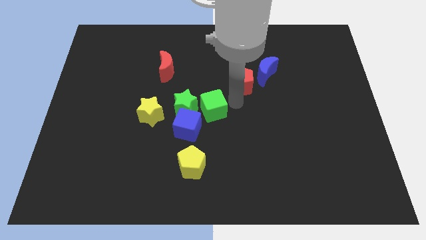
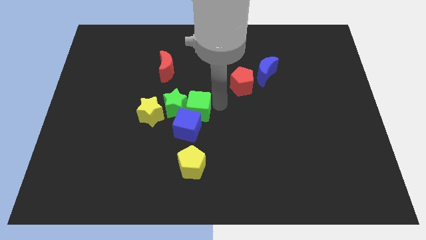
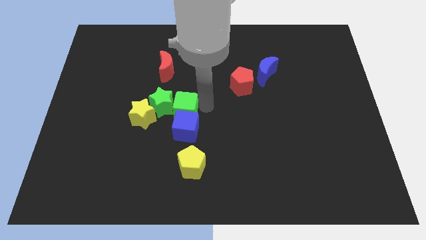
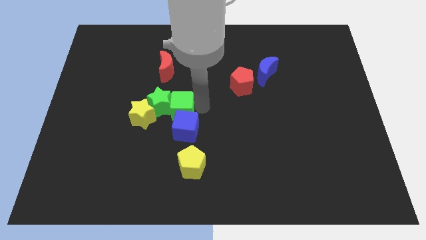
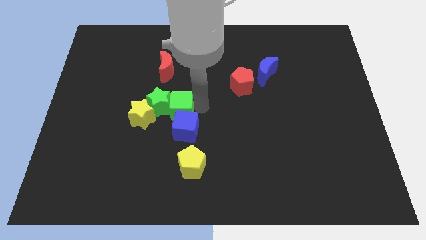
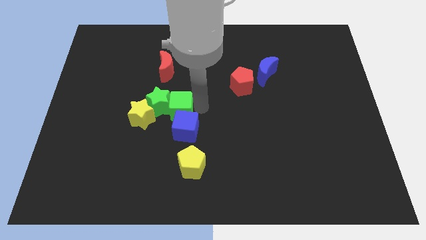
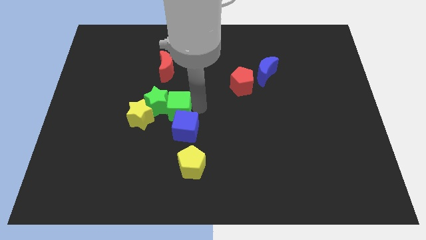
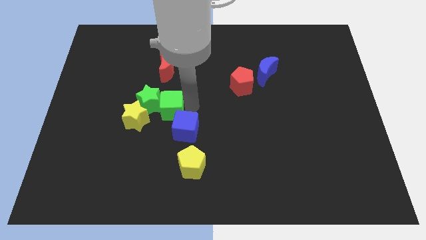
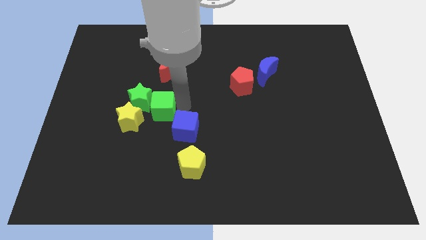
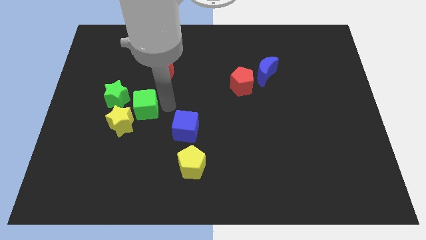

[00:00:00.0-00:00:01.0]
place green cube top left of blue cube

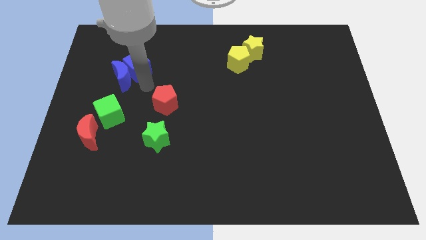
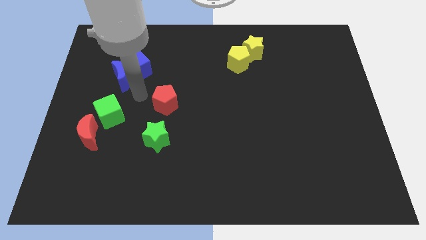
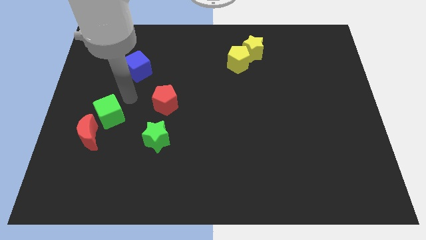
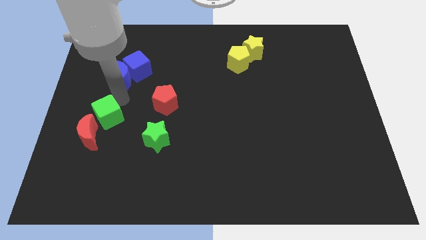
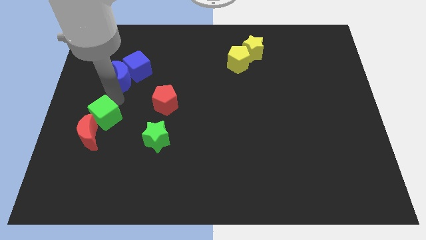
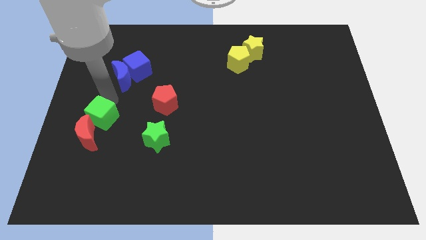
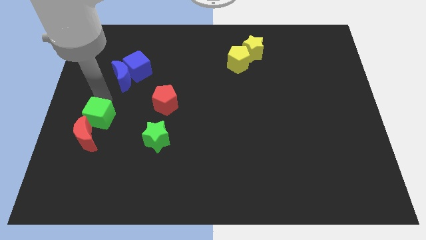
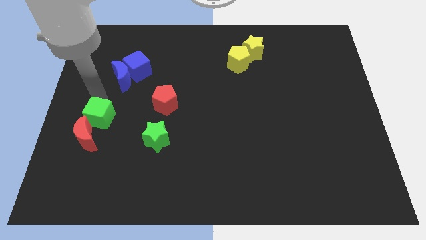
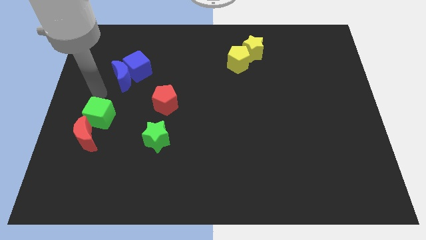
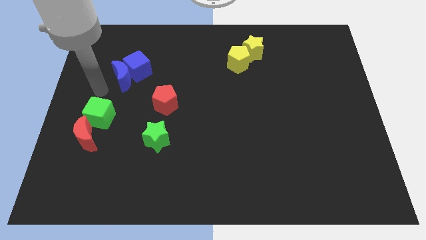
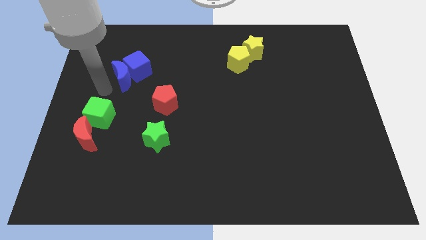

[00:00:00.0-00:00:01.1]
move the green cube into the red crescent

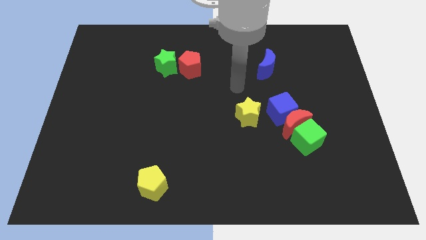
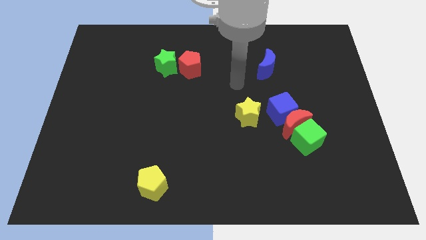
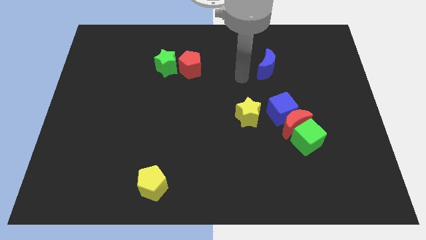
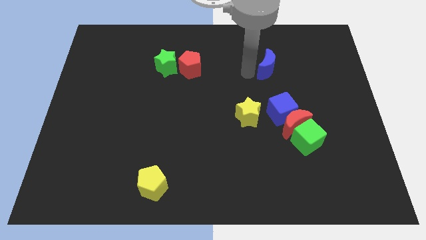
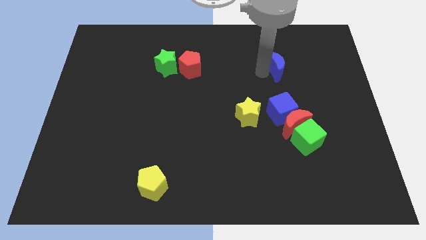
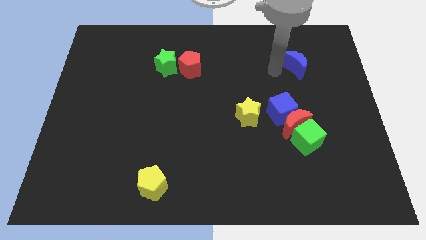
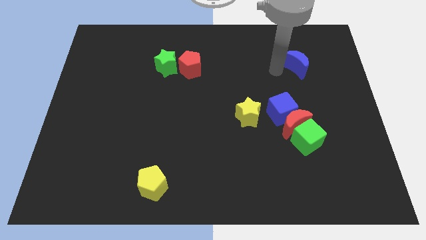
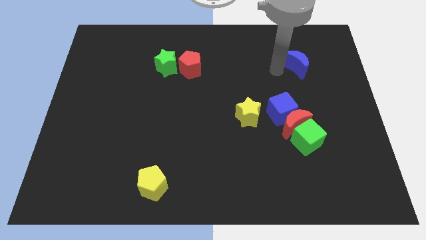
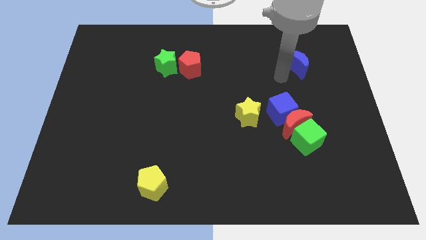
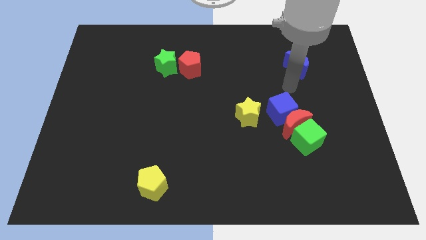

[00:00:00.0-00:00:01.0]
push the blue crescent slightly towards the top right of the board

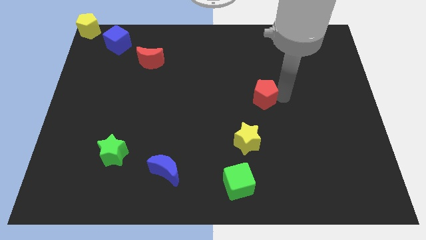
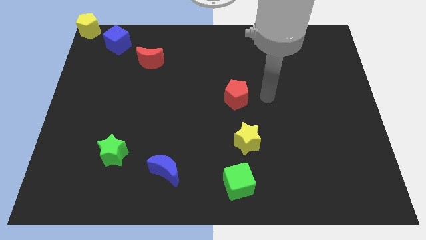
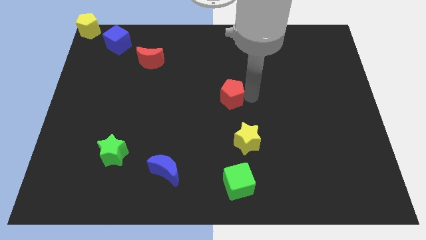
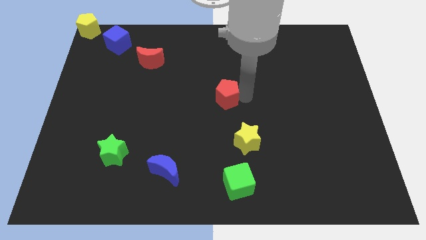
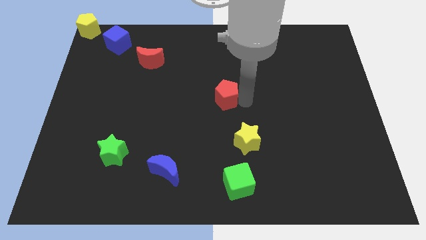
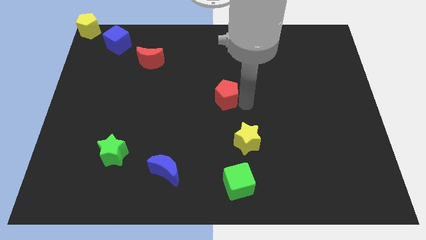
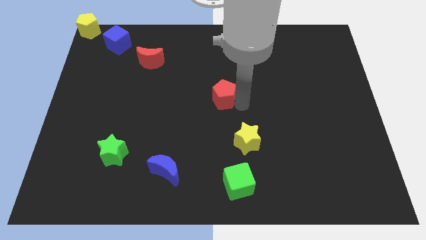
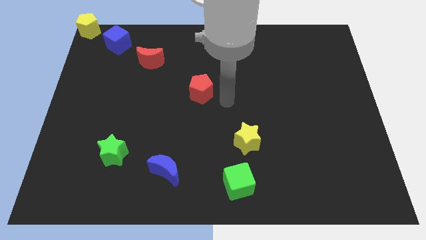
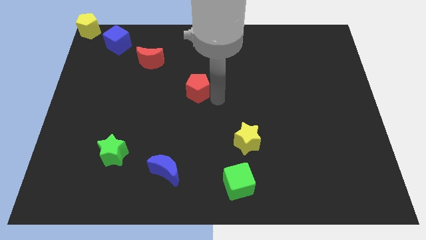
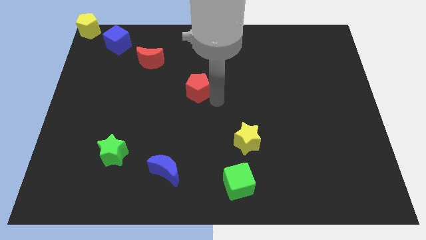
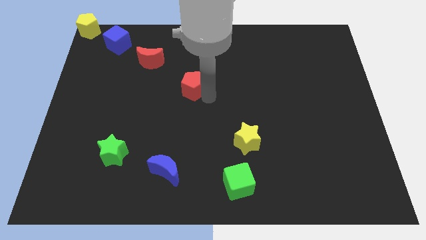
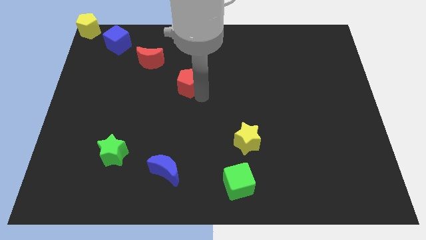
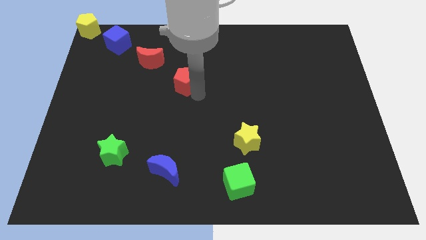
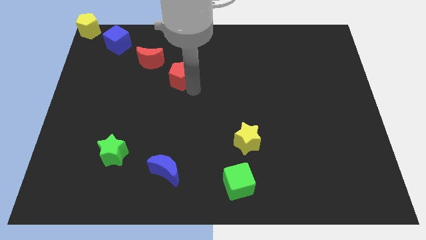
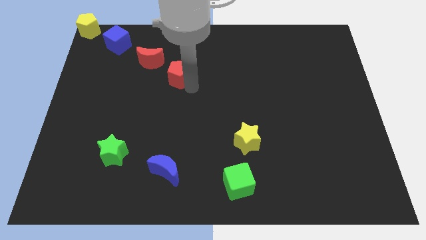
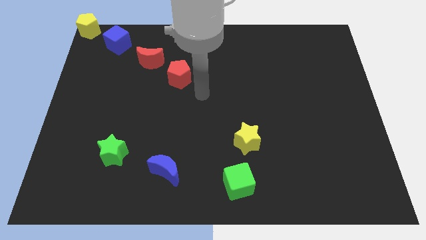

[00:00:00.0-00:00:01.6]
push the red pentagon to bottom right side of the red crescent on the board

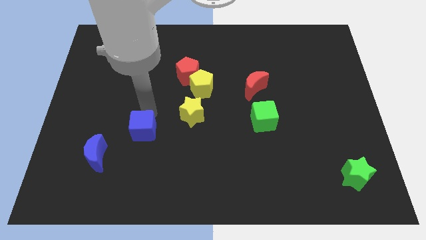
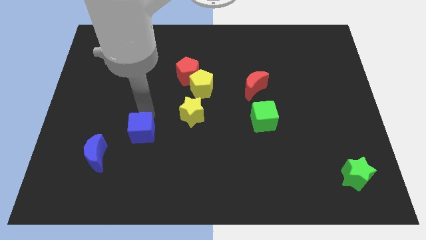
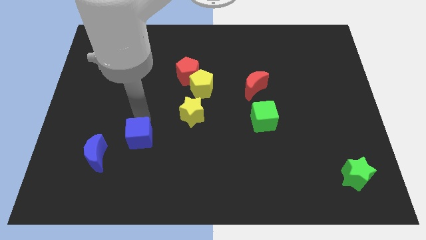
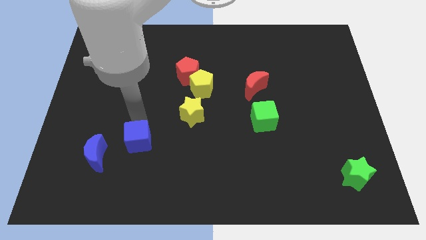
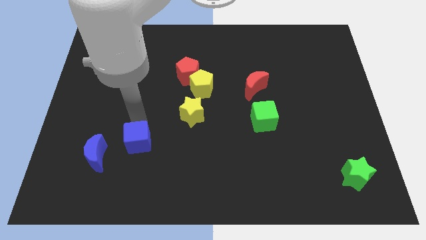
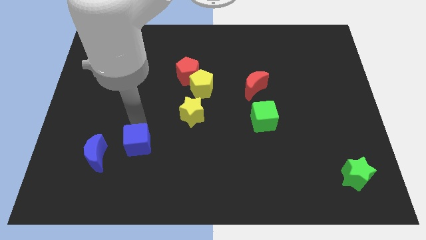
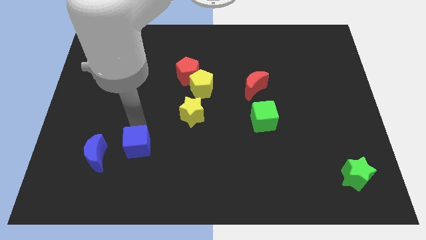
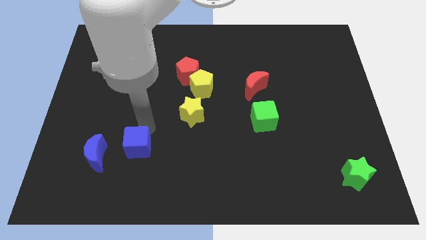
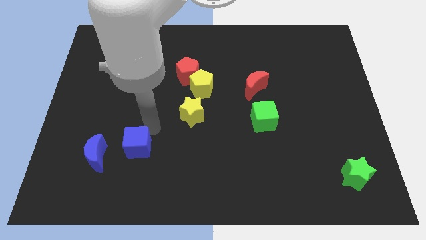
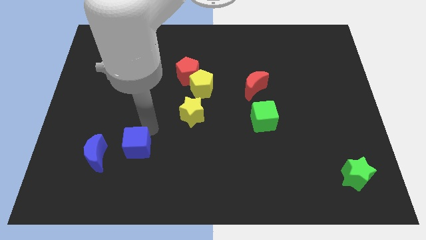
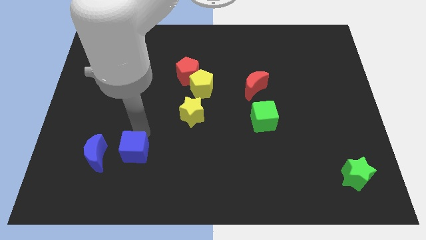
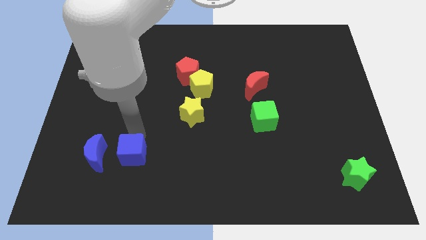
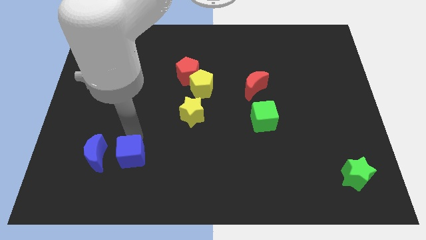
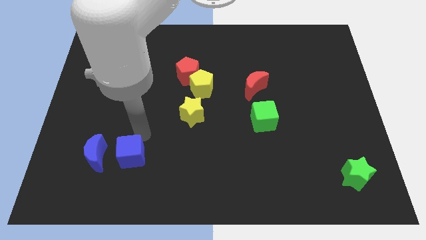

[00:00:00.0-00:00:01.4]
push blue cube to the right of the blue moon

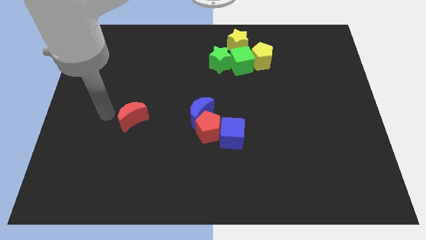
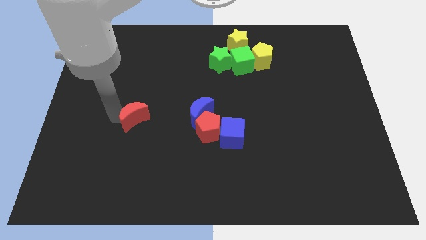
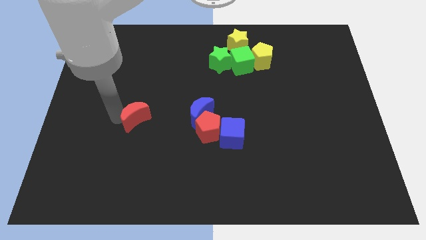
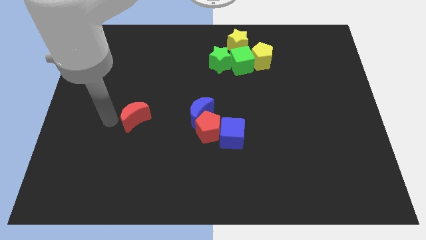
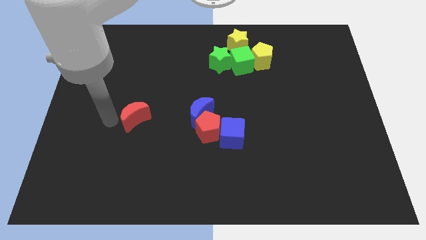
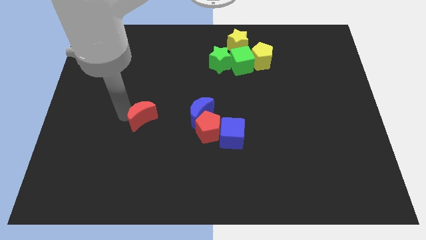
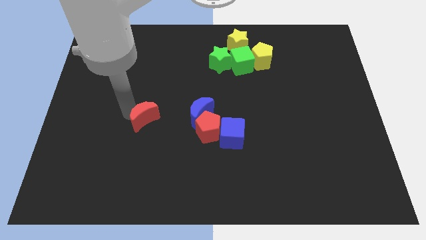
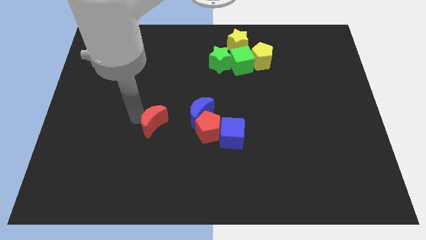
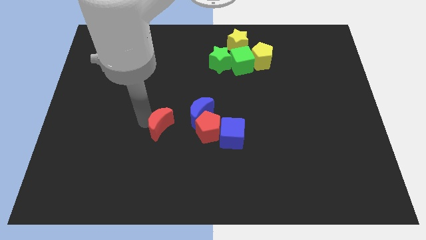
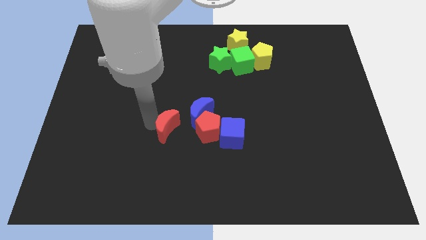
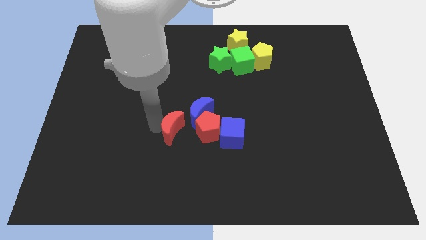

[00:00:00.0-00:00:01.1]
push the red moon towards blue moon and red pentagon

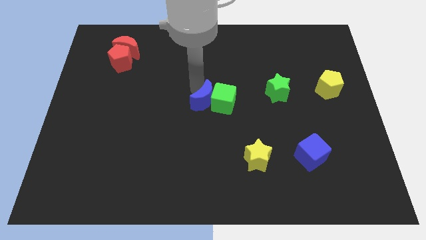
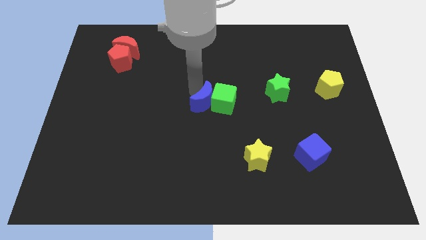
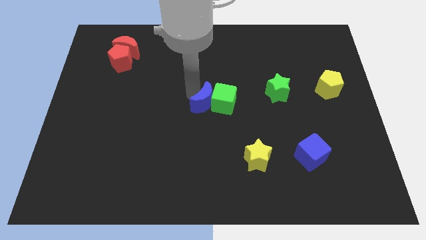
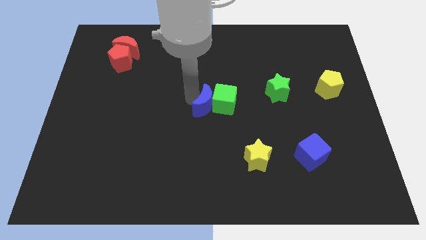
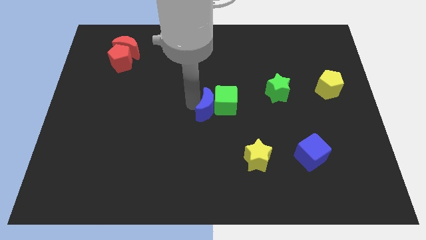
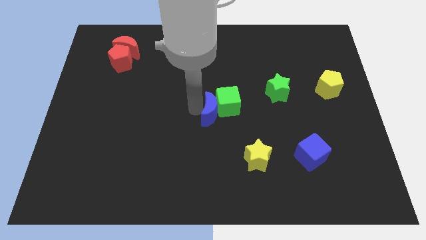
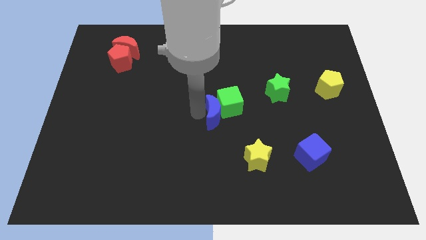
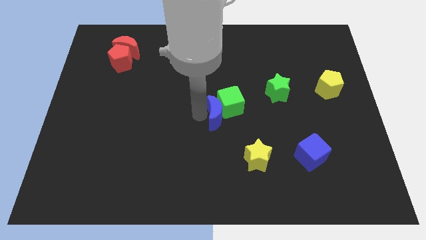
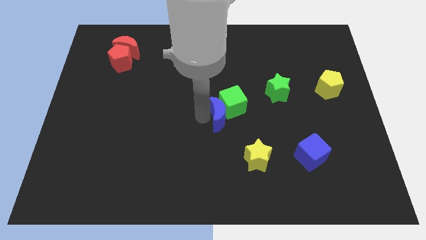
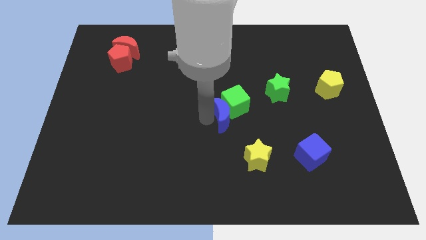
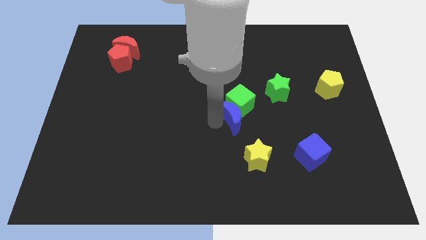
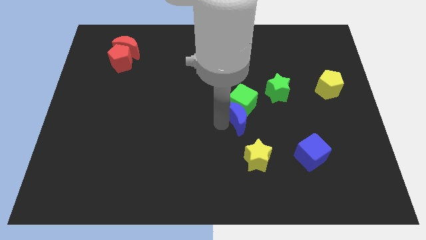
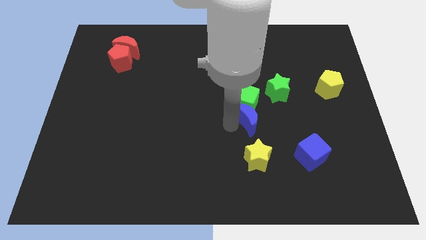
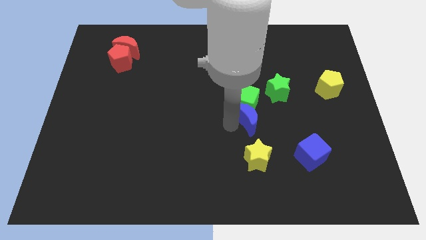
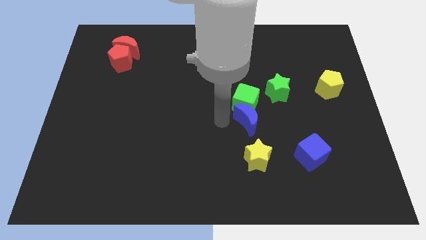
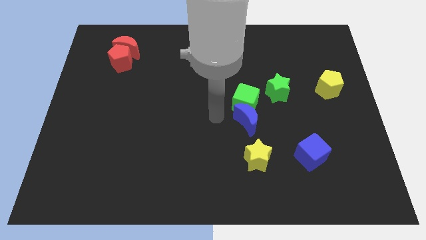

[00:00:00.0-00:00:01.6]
push the green cubeblue crescent towards the green star

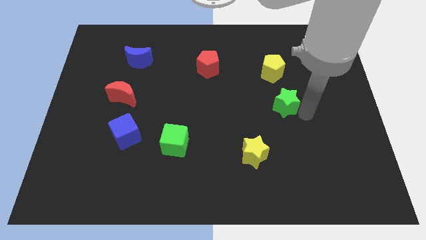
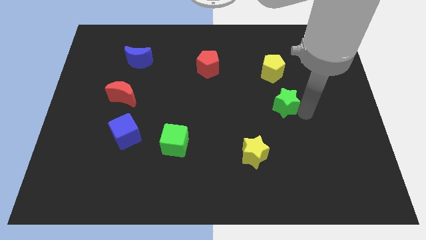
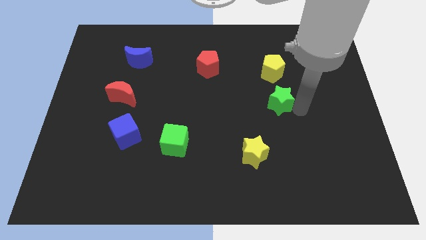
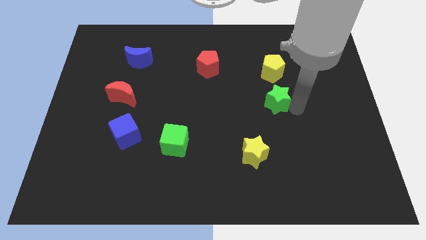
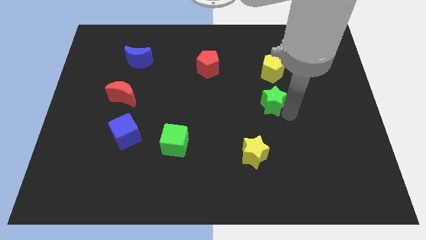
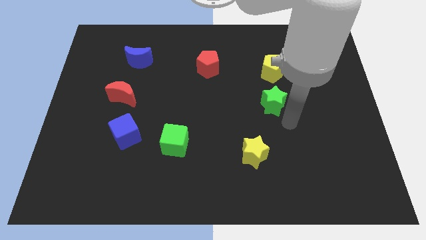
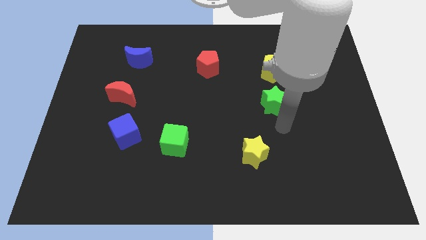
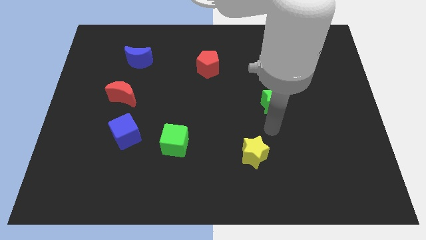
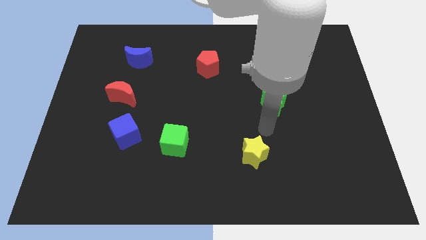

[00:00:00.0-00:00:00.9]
put green star at the bottom of yellow pentagon
